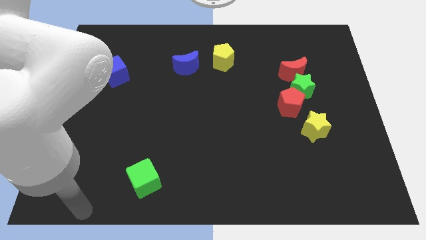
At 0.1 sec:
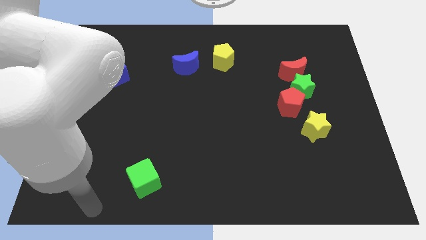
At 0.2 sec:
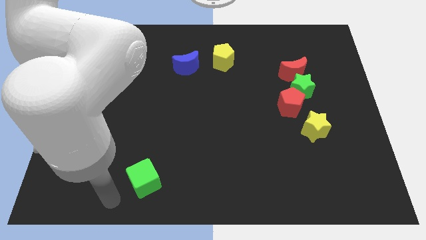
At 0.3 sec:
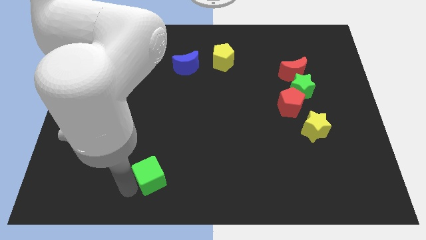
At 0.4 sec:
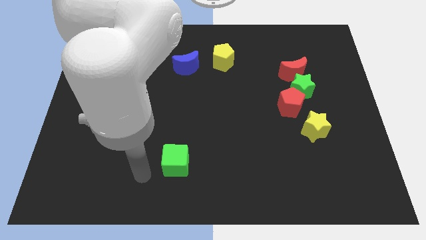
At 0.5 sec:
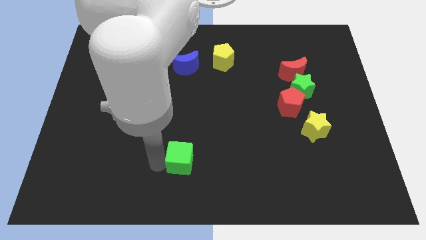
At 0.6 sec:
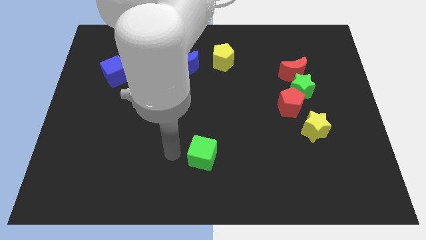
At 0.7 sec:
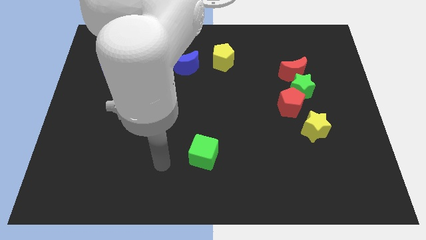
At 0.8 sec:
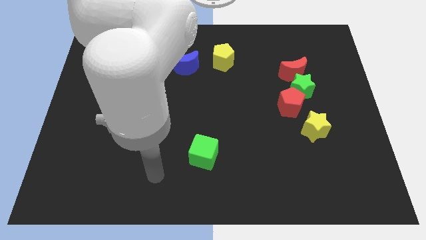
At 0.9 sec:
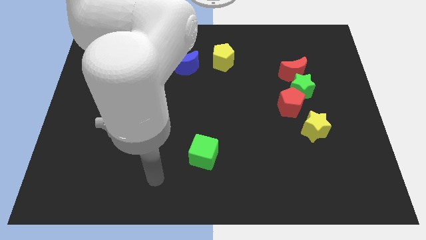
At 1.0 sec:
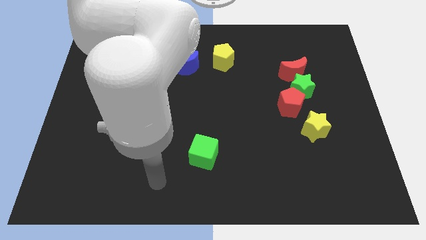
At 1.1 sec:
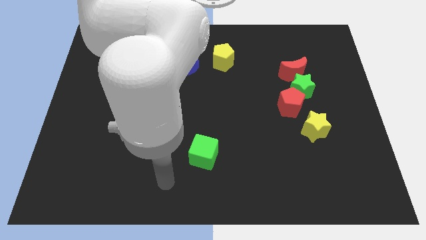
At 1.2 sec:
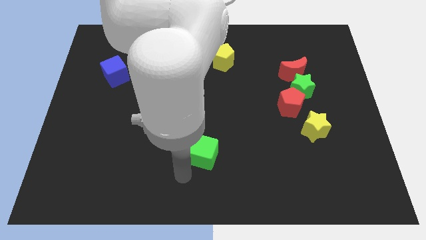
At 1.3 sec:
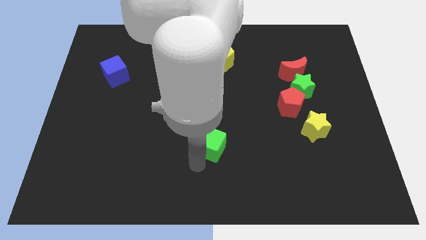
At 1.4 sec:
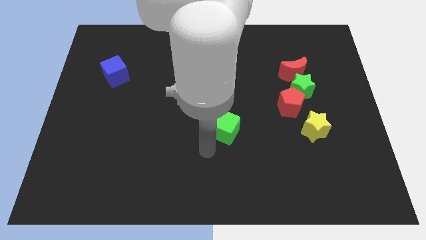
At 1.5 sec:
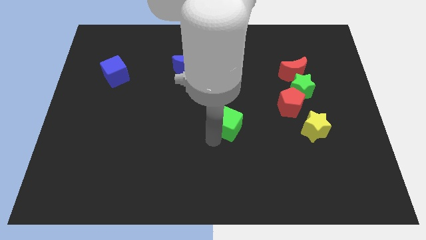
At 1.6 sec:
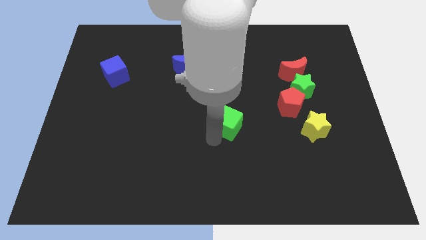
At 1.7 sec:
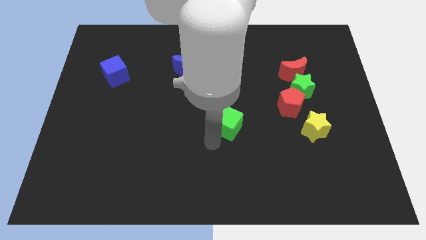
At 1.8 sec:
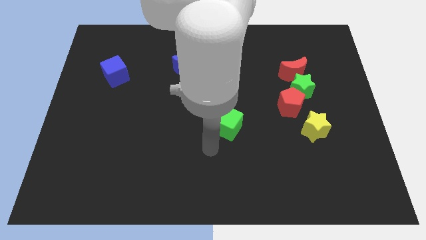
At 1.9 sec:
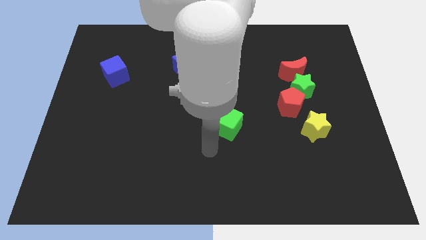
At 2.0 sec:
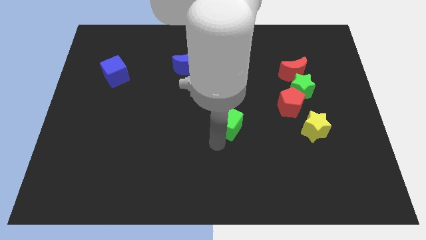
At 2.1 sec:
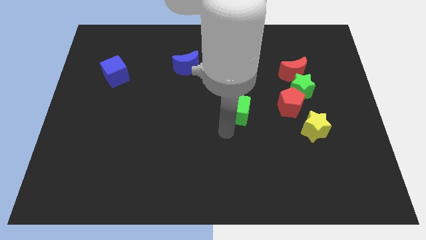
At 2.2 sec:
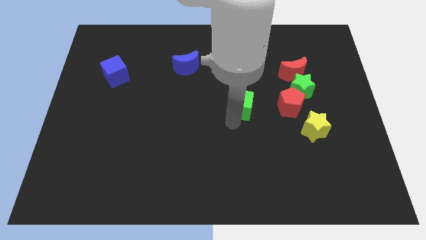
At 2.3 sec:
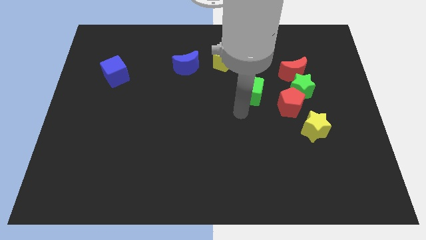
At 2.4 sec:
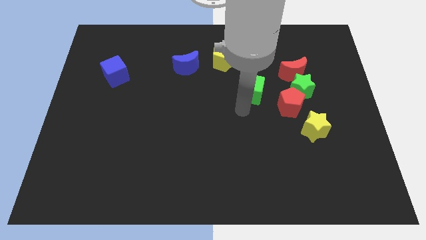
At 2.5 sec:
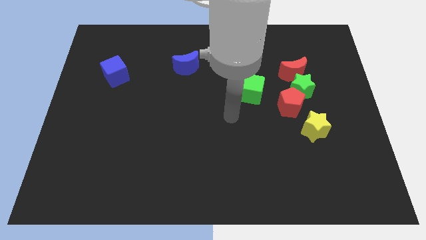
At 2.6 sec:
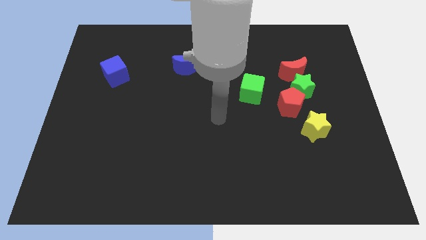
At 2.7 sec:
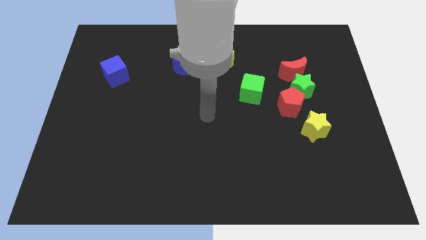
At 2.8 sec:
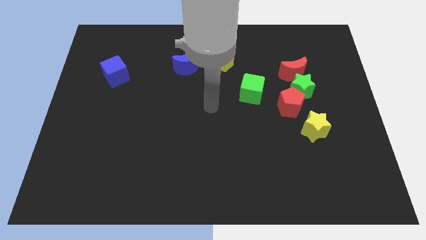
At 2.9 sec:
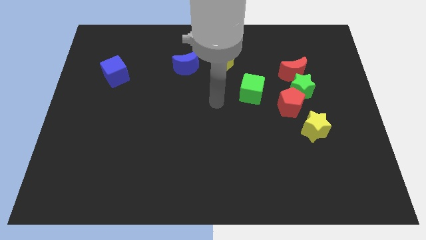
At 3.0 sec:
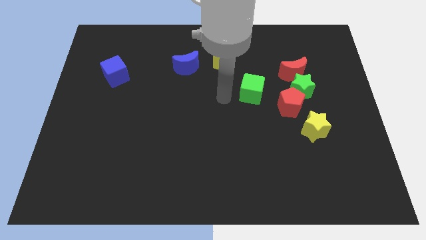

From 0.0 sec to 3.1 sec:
move the green cube to the left of the red pentagon

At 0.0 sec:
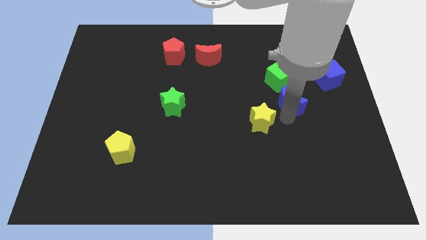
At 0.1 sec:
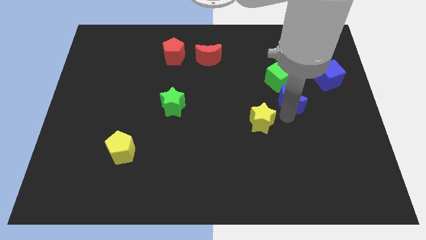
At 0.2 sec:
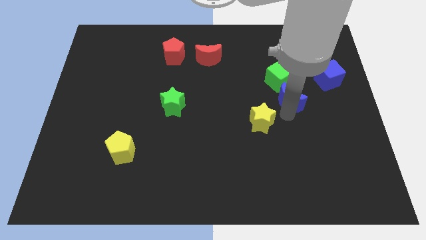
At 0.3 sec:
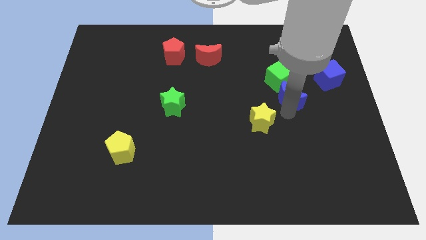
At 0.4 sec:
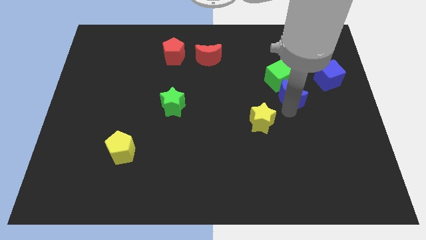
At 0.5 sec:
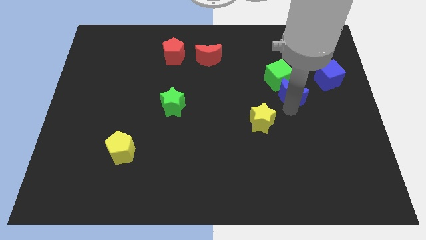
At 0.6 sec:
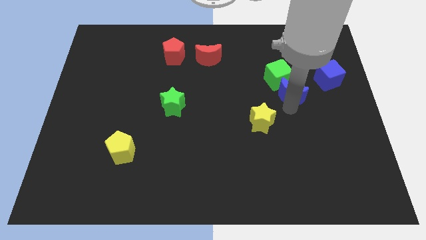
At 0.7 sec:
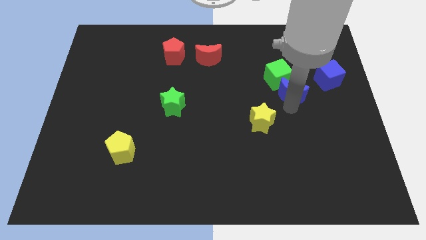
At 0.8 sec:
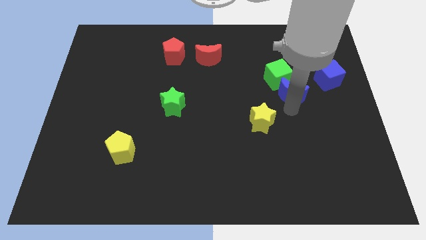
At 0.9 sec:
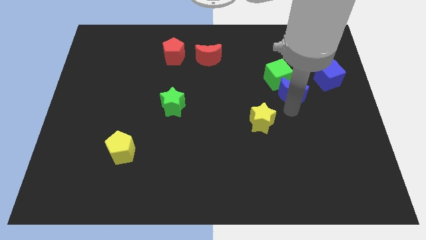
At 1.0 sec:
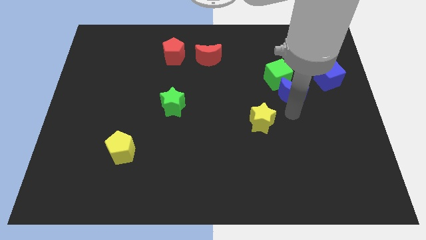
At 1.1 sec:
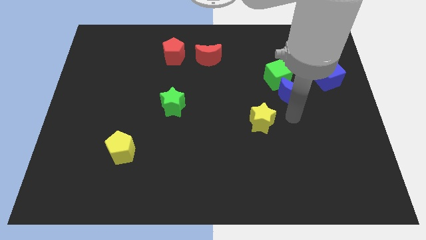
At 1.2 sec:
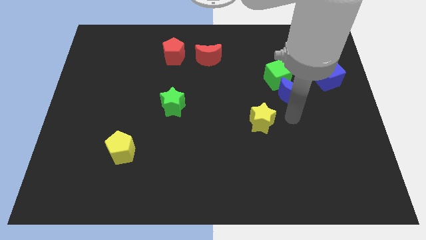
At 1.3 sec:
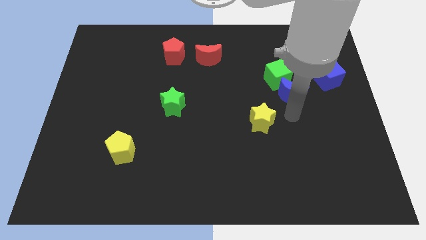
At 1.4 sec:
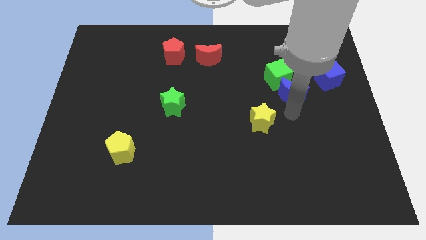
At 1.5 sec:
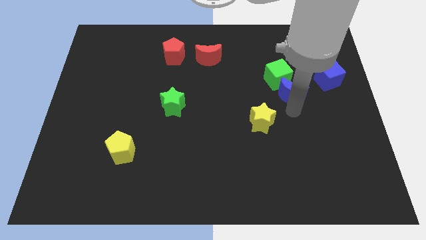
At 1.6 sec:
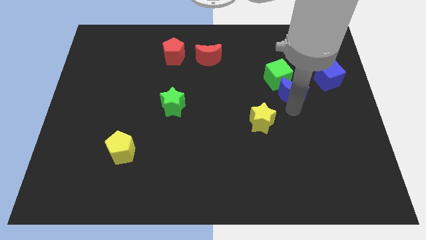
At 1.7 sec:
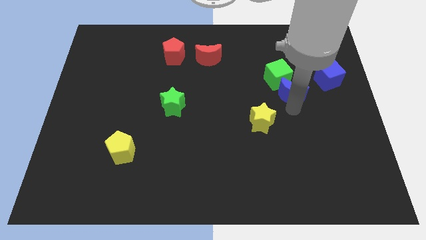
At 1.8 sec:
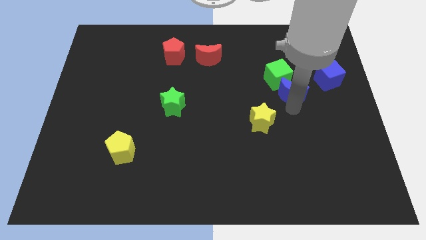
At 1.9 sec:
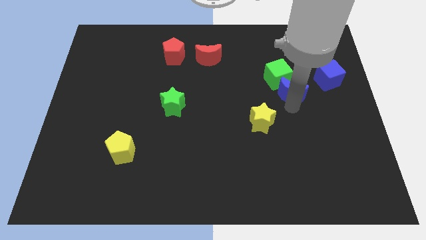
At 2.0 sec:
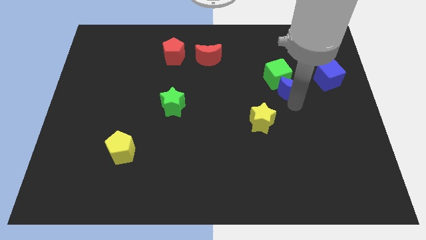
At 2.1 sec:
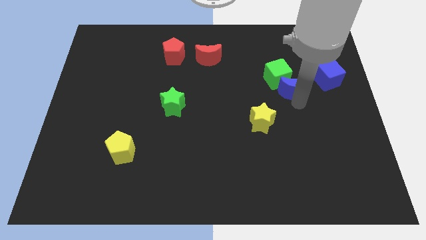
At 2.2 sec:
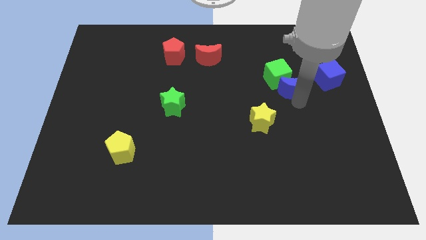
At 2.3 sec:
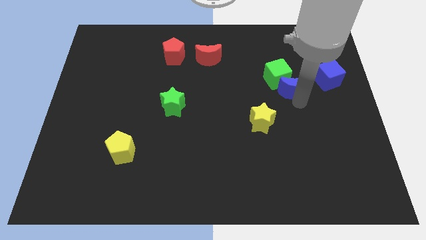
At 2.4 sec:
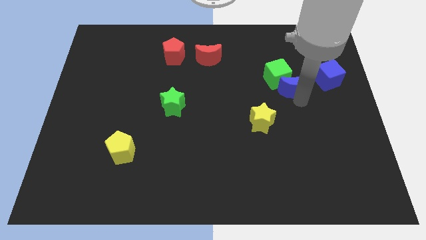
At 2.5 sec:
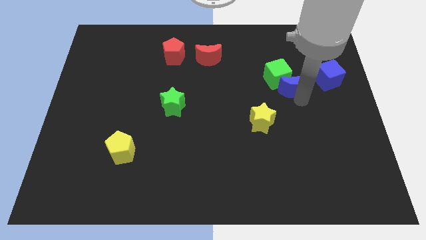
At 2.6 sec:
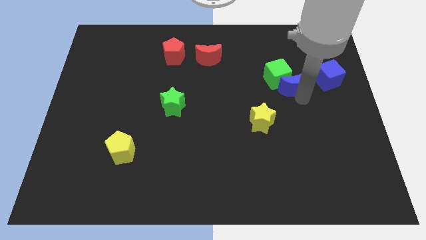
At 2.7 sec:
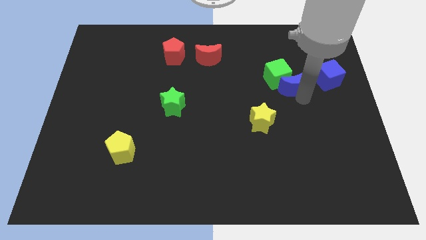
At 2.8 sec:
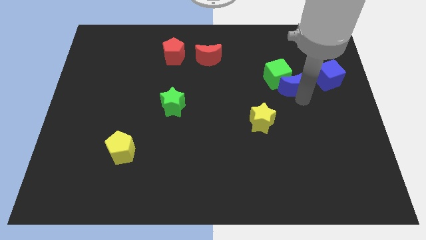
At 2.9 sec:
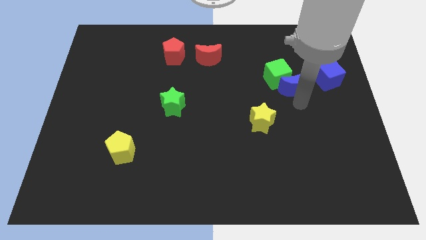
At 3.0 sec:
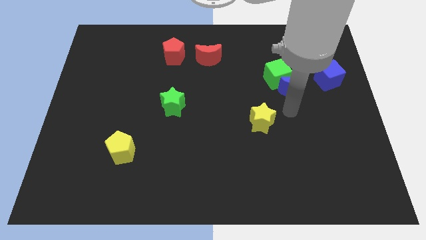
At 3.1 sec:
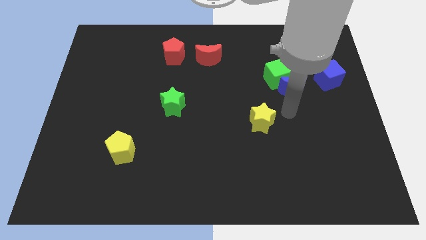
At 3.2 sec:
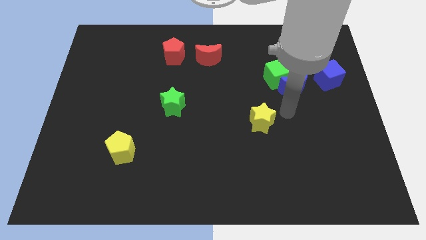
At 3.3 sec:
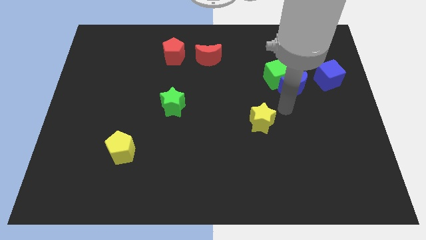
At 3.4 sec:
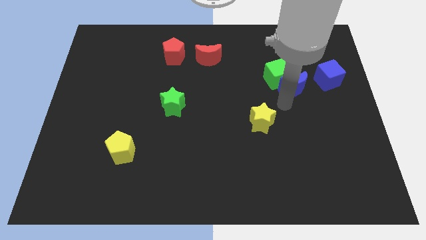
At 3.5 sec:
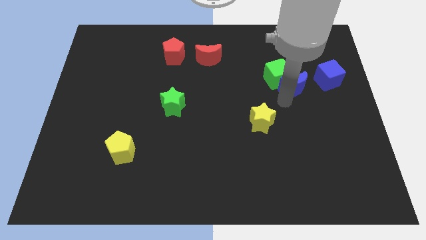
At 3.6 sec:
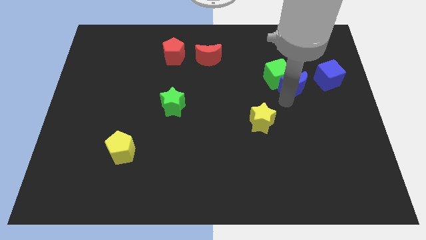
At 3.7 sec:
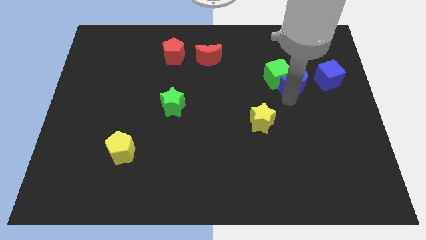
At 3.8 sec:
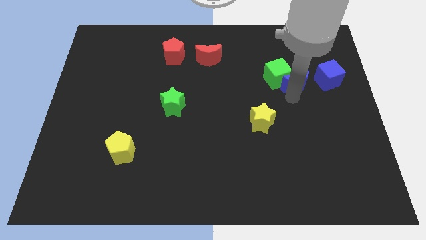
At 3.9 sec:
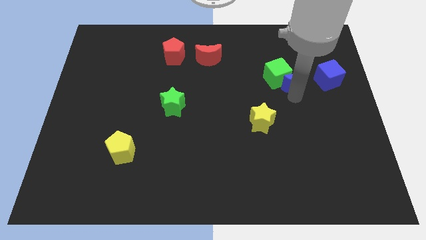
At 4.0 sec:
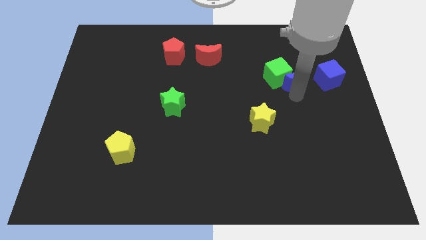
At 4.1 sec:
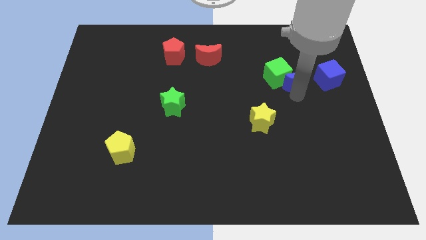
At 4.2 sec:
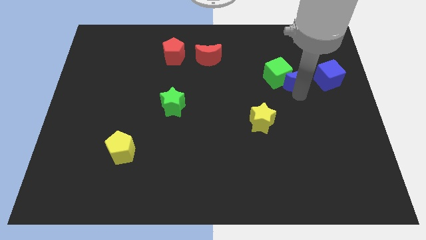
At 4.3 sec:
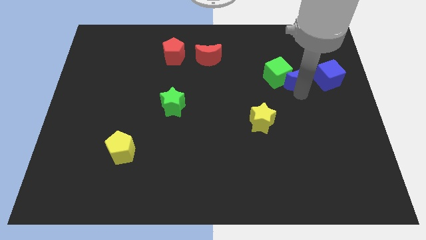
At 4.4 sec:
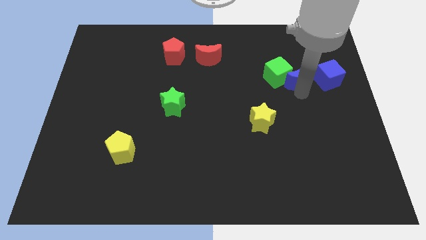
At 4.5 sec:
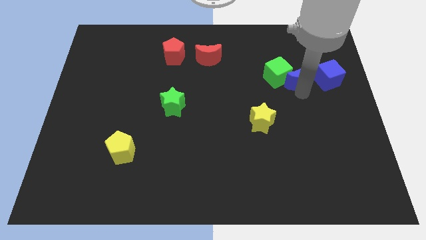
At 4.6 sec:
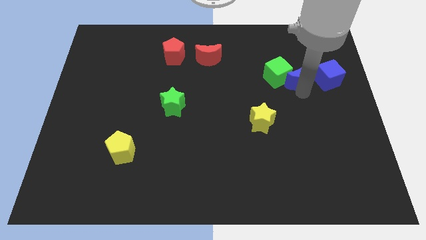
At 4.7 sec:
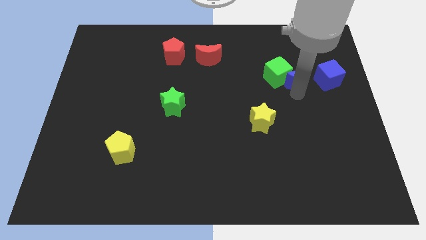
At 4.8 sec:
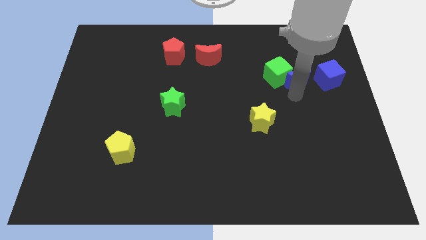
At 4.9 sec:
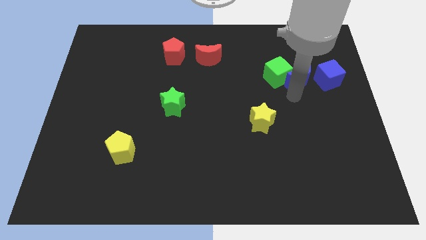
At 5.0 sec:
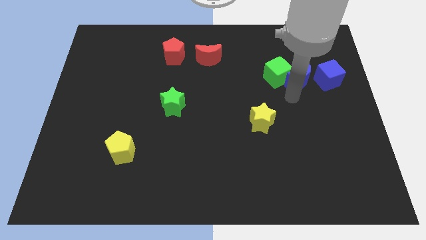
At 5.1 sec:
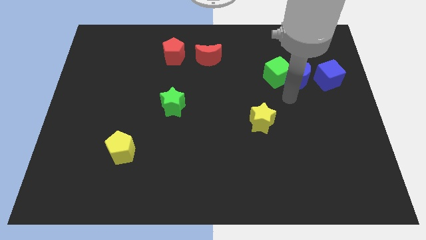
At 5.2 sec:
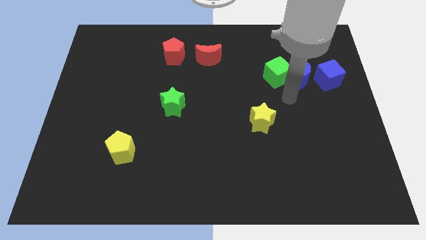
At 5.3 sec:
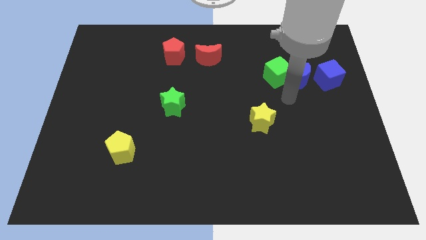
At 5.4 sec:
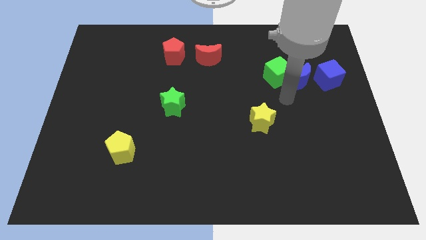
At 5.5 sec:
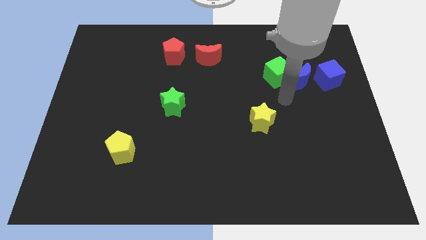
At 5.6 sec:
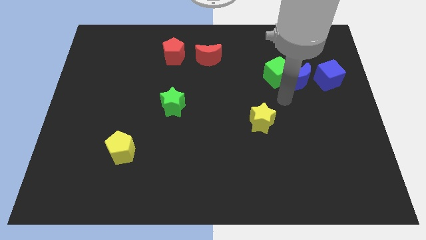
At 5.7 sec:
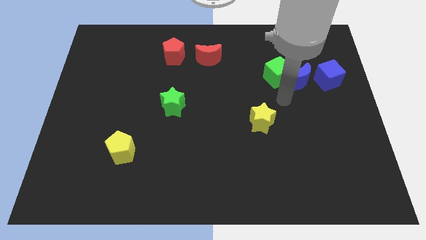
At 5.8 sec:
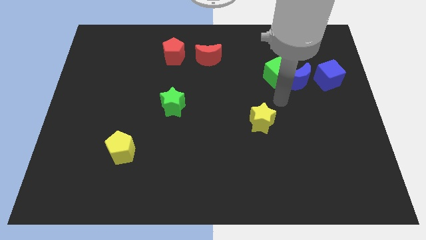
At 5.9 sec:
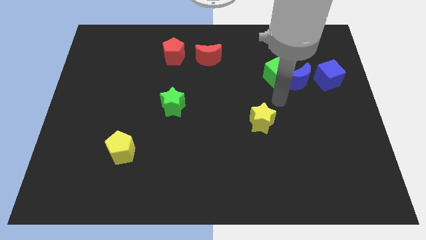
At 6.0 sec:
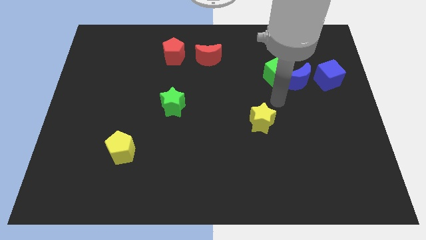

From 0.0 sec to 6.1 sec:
push the blue crescent into the green cube at its bottom
